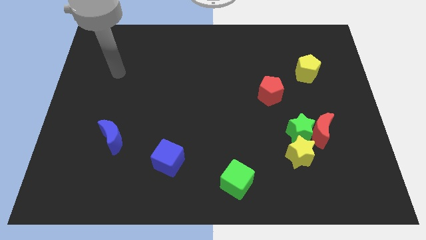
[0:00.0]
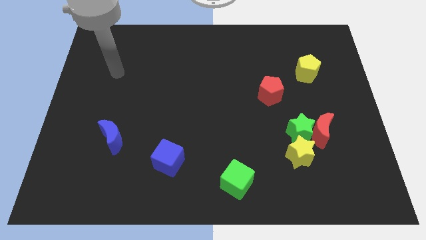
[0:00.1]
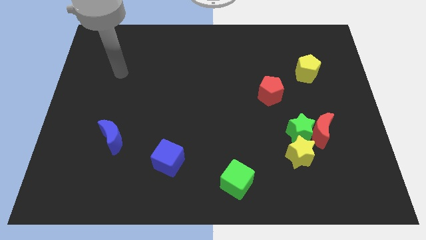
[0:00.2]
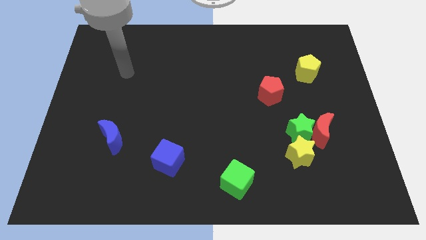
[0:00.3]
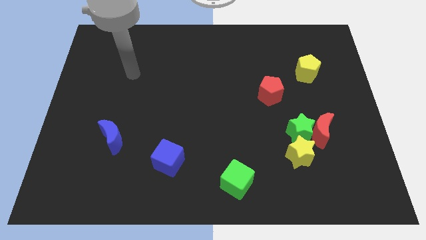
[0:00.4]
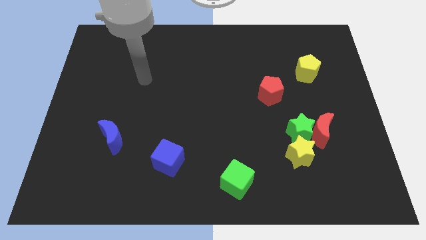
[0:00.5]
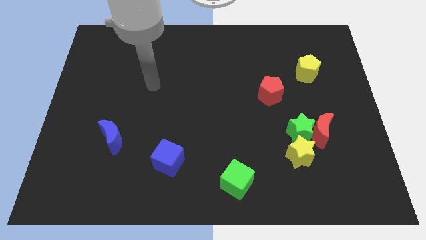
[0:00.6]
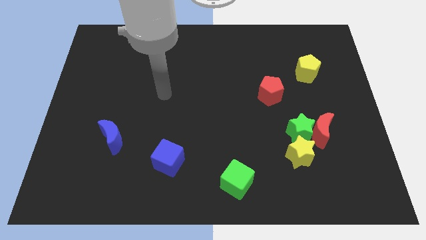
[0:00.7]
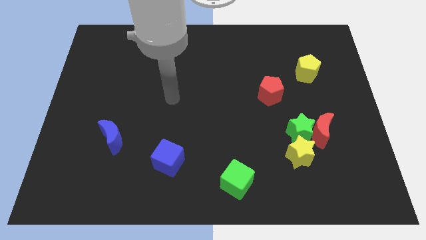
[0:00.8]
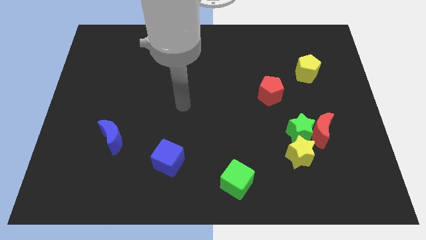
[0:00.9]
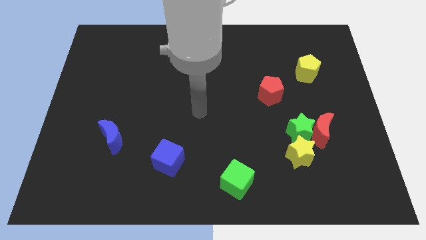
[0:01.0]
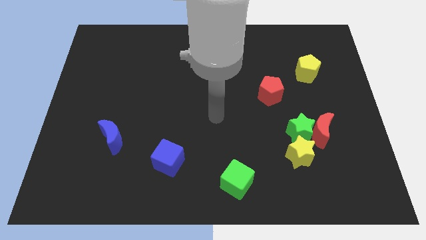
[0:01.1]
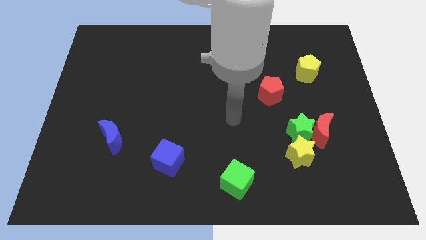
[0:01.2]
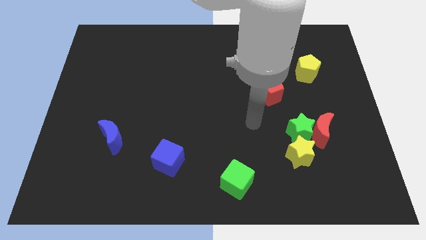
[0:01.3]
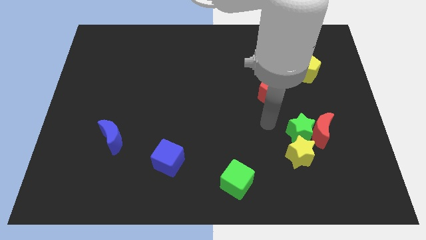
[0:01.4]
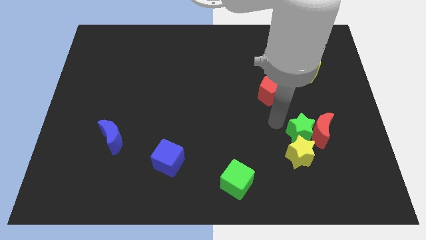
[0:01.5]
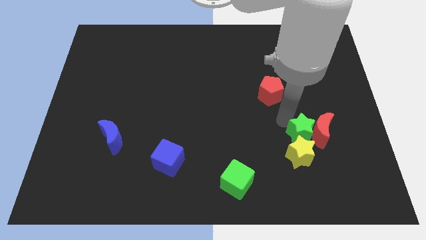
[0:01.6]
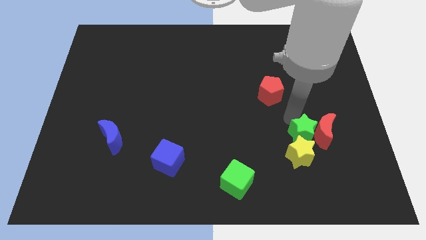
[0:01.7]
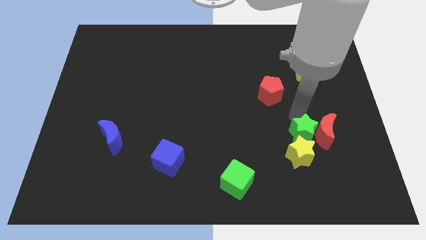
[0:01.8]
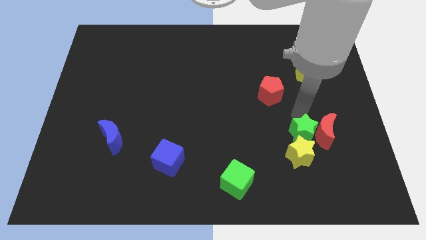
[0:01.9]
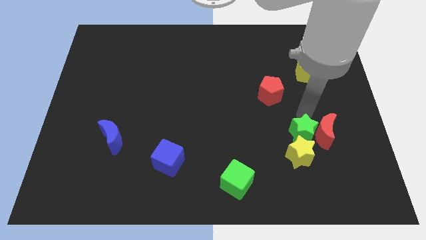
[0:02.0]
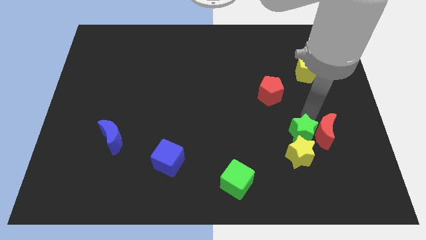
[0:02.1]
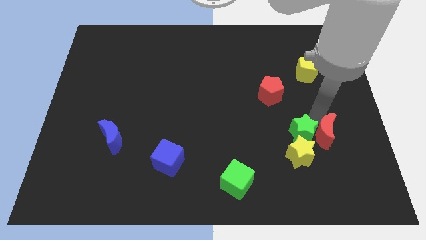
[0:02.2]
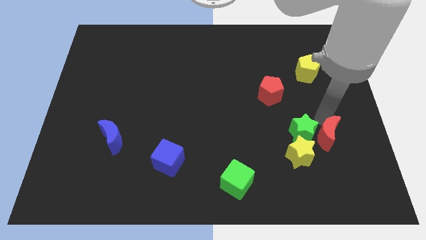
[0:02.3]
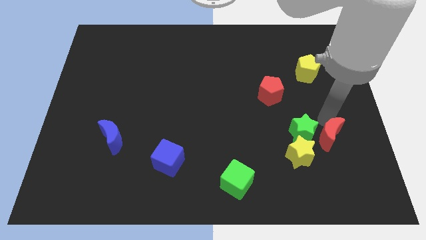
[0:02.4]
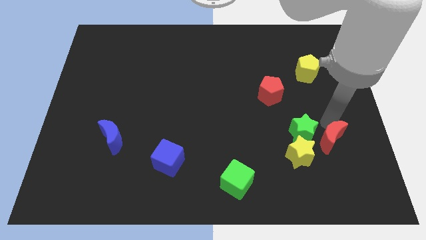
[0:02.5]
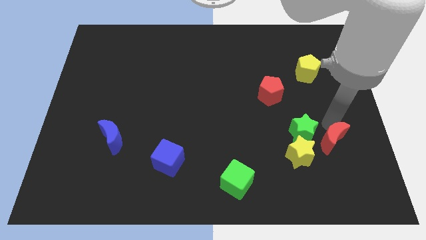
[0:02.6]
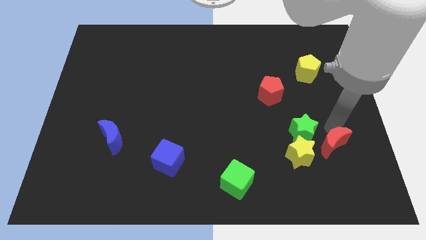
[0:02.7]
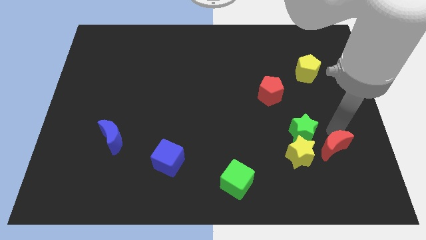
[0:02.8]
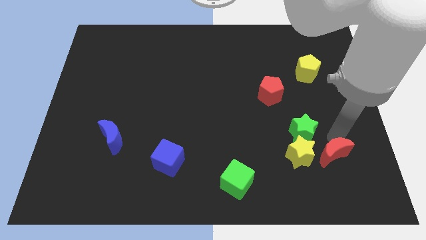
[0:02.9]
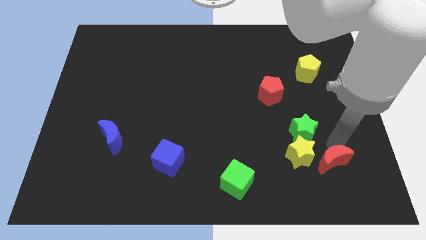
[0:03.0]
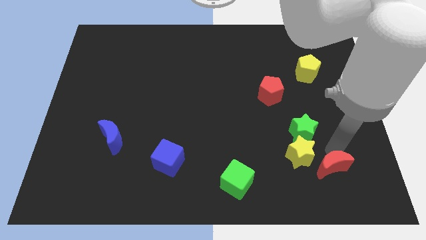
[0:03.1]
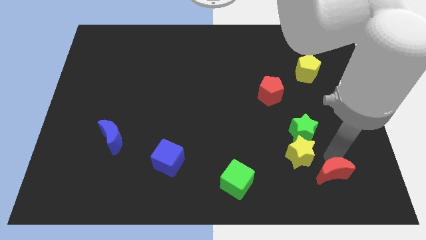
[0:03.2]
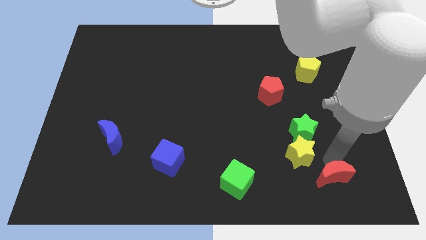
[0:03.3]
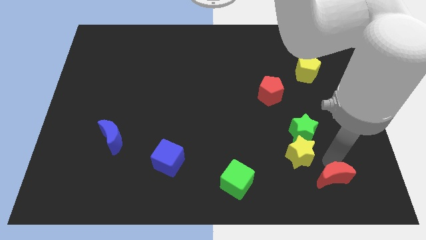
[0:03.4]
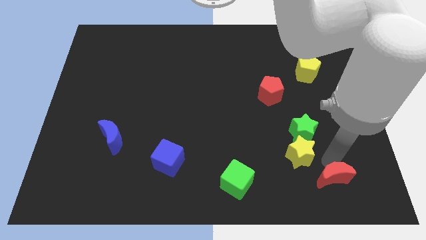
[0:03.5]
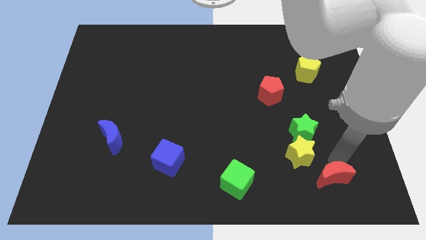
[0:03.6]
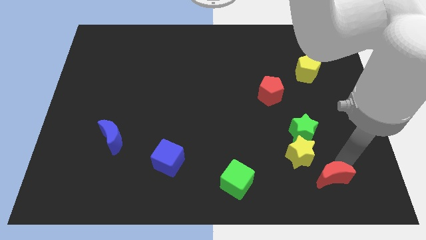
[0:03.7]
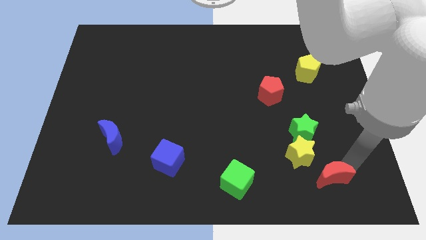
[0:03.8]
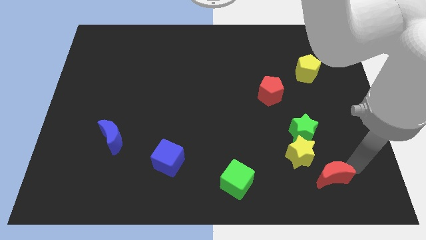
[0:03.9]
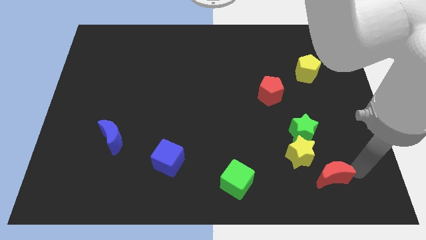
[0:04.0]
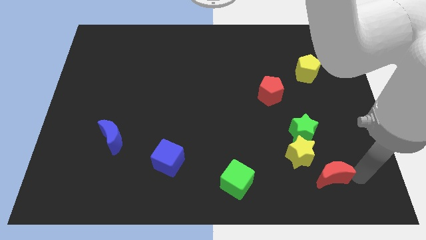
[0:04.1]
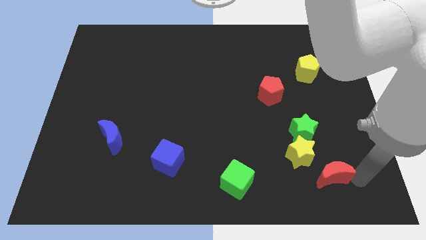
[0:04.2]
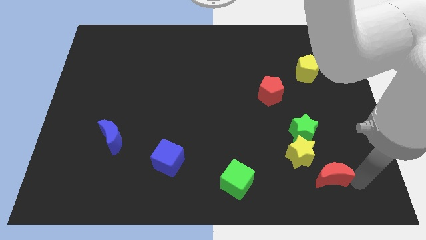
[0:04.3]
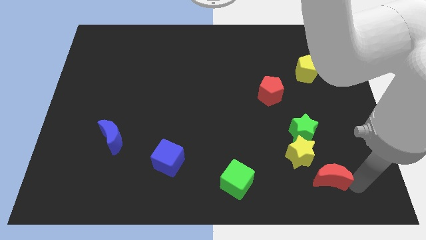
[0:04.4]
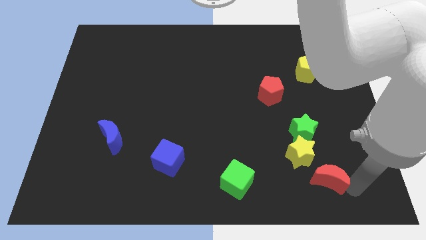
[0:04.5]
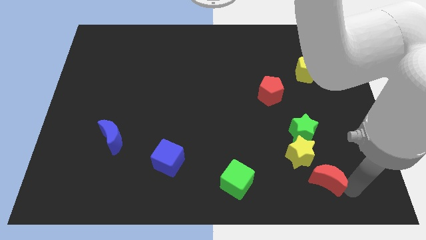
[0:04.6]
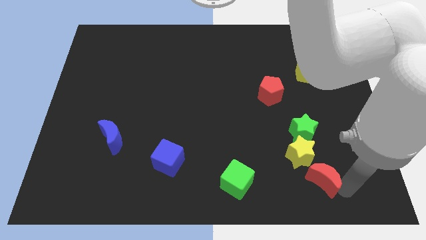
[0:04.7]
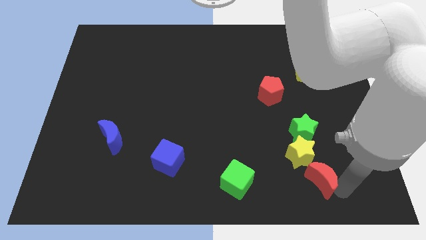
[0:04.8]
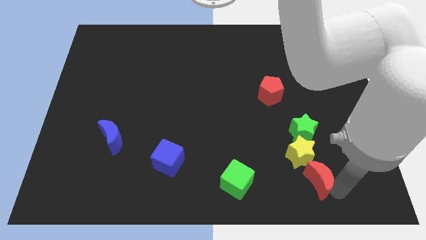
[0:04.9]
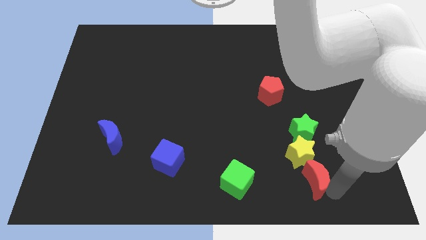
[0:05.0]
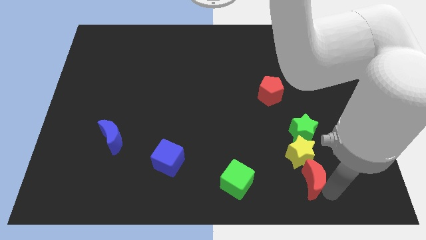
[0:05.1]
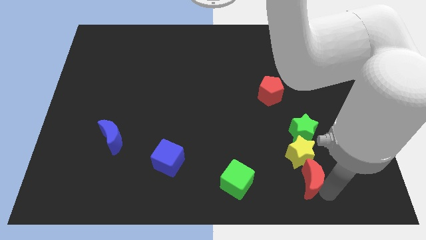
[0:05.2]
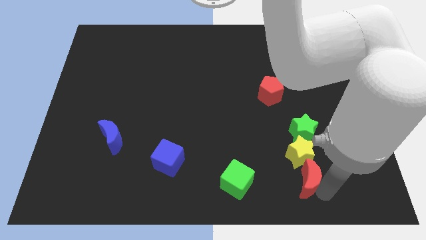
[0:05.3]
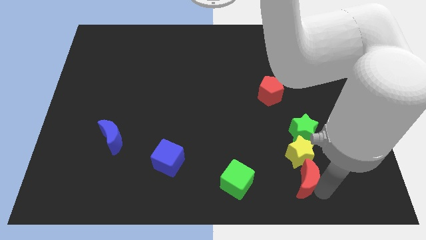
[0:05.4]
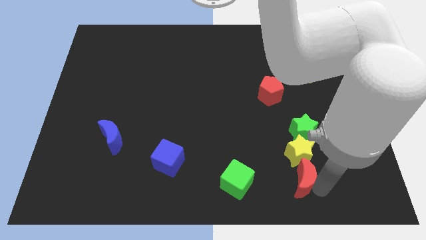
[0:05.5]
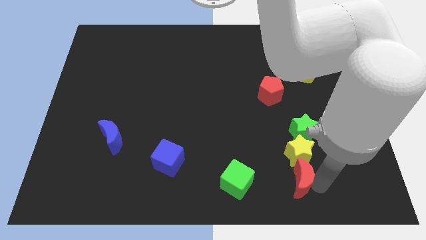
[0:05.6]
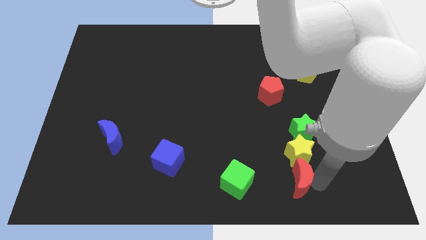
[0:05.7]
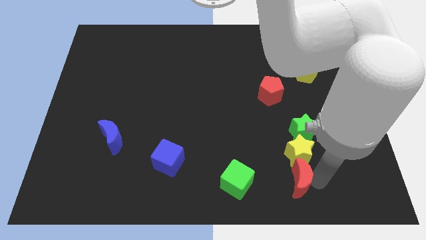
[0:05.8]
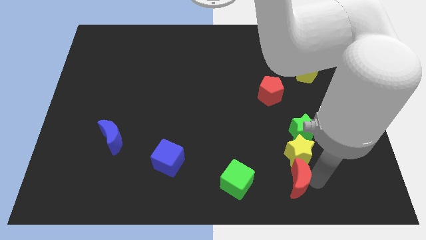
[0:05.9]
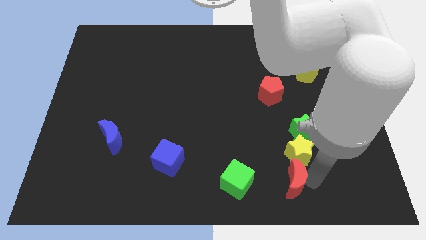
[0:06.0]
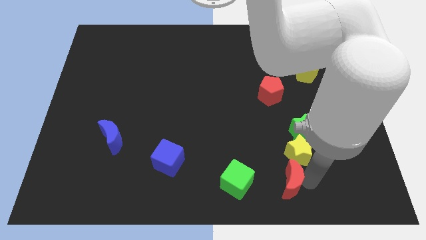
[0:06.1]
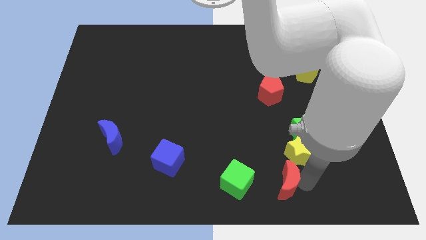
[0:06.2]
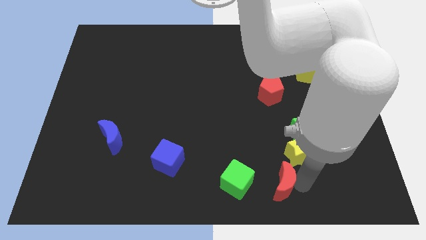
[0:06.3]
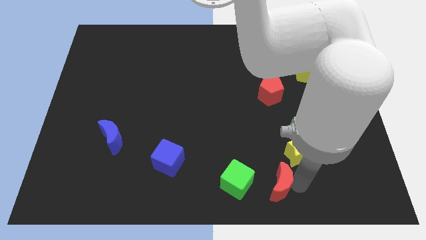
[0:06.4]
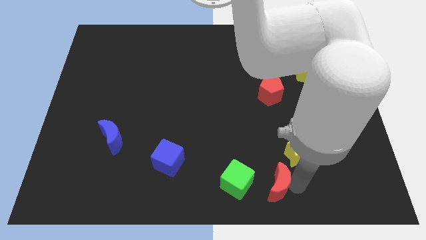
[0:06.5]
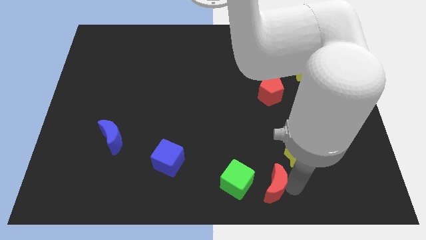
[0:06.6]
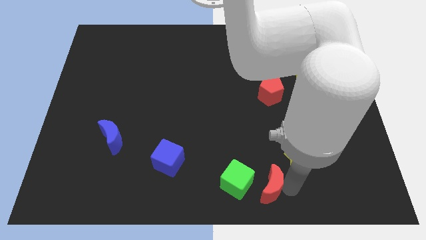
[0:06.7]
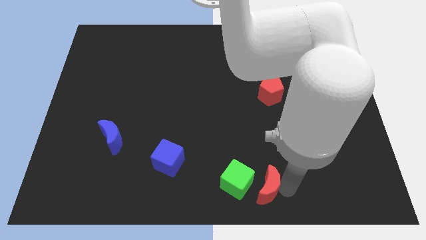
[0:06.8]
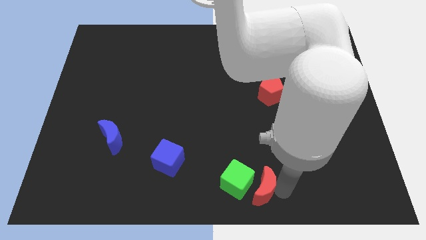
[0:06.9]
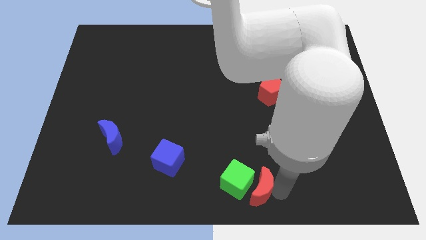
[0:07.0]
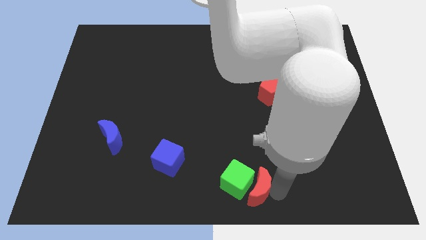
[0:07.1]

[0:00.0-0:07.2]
slide the red moon towards the green cube

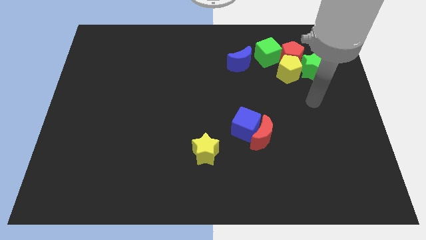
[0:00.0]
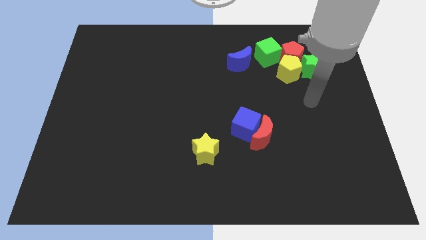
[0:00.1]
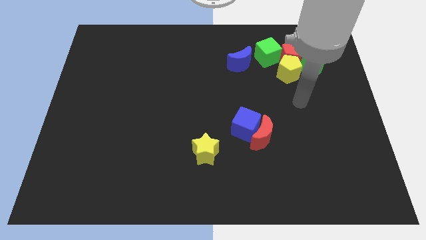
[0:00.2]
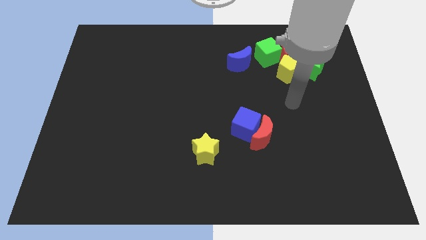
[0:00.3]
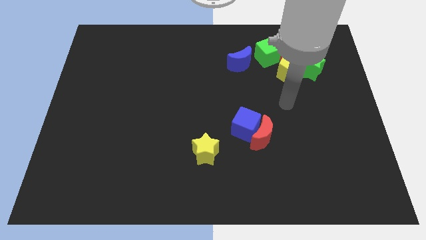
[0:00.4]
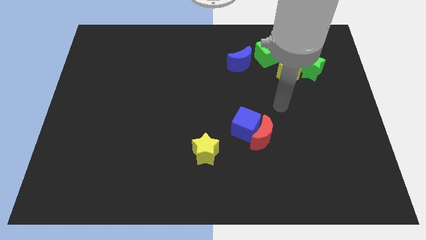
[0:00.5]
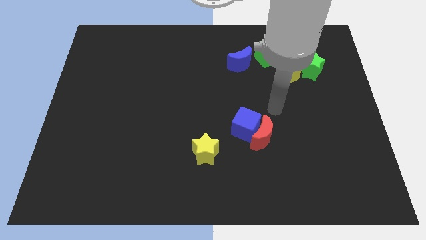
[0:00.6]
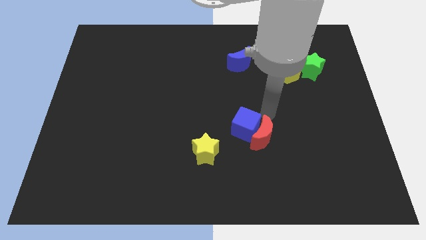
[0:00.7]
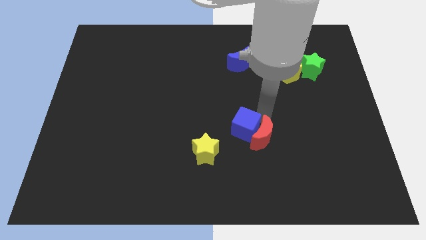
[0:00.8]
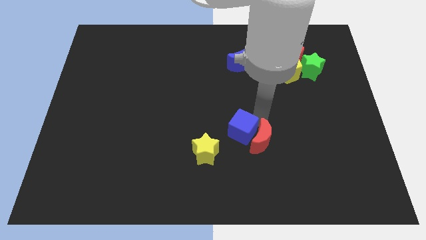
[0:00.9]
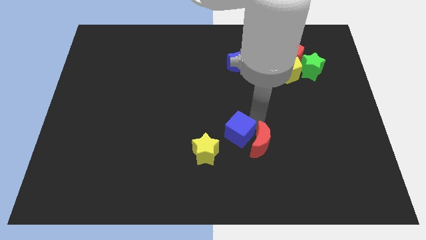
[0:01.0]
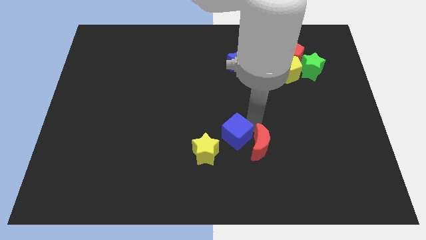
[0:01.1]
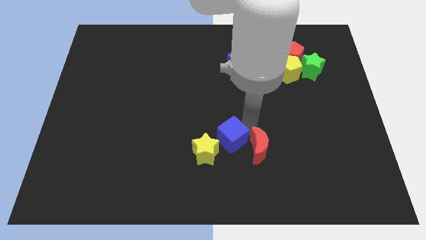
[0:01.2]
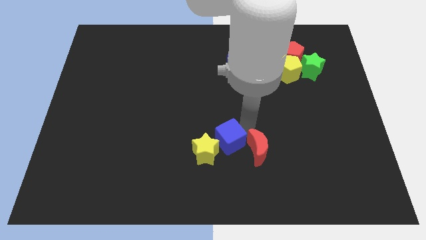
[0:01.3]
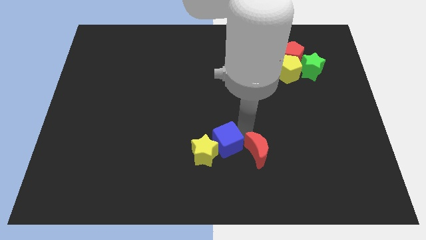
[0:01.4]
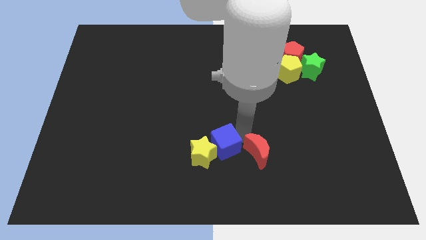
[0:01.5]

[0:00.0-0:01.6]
slide the blue cube next to the yellow star
